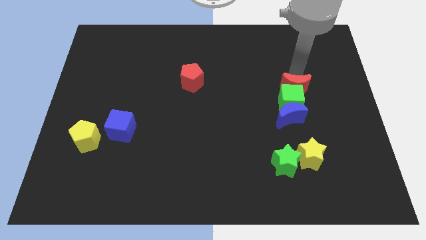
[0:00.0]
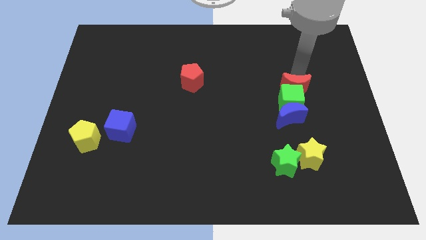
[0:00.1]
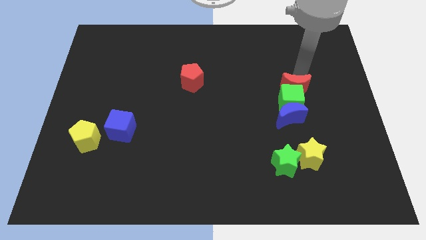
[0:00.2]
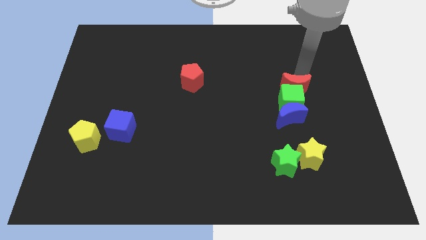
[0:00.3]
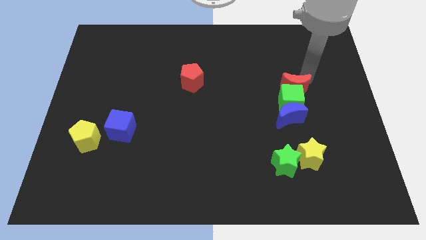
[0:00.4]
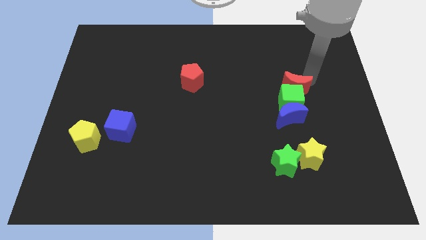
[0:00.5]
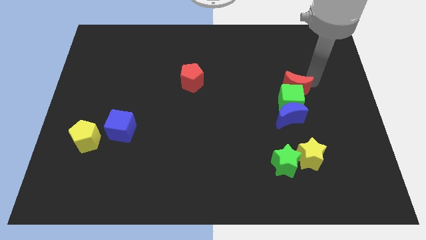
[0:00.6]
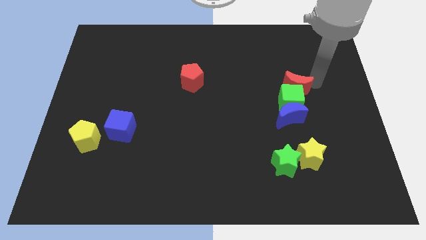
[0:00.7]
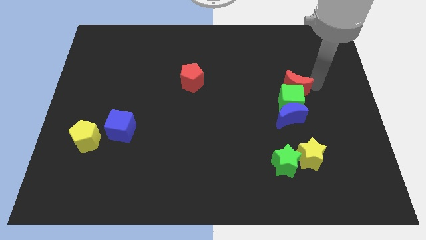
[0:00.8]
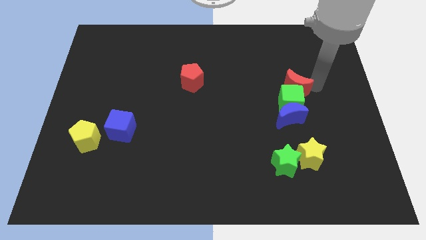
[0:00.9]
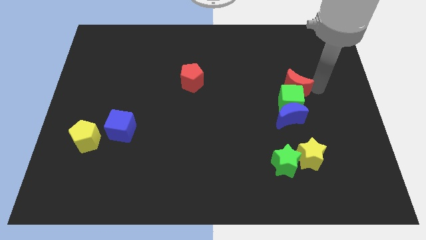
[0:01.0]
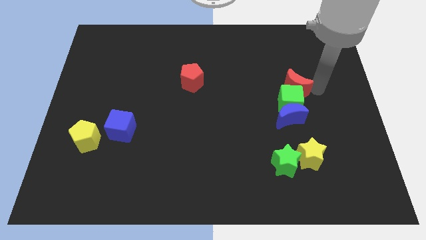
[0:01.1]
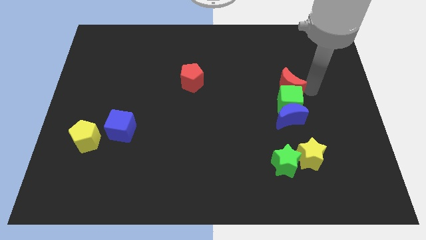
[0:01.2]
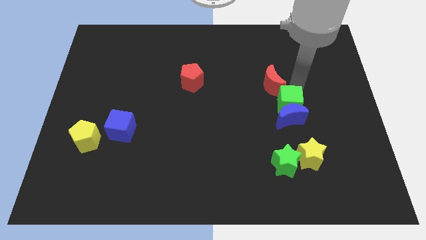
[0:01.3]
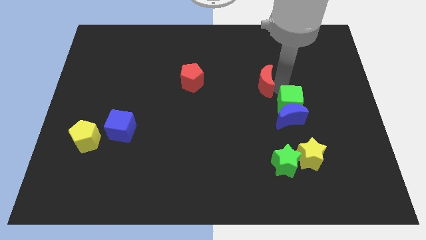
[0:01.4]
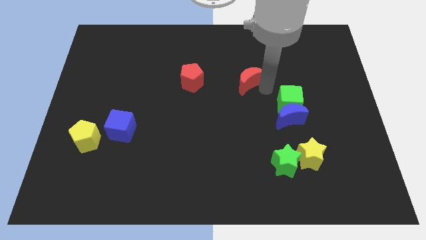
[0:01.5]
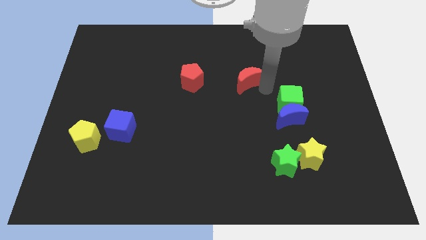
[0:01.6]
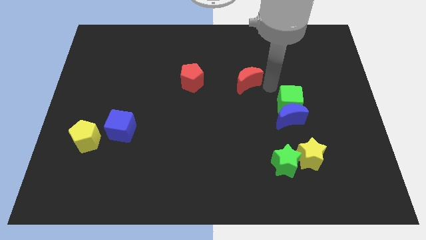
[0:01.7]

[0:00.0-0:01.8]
push the red moon to the right side of the red pentagon

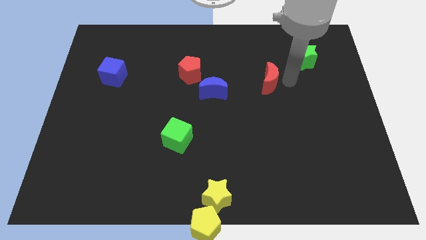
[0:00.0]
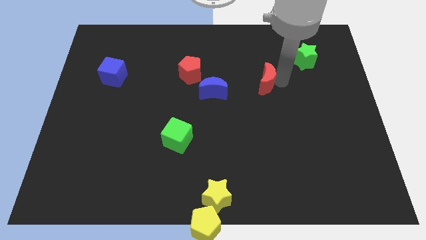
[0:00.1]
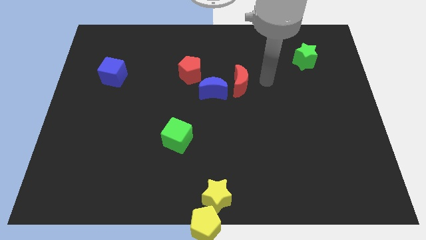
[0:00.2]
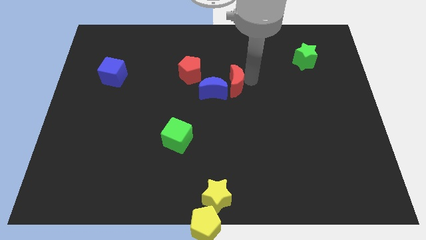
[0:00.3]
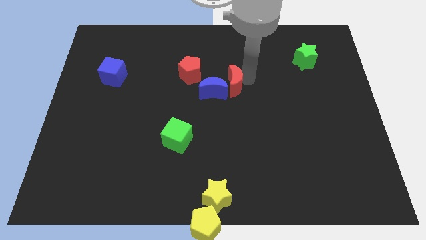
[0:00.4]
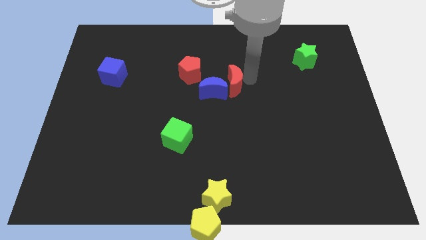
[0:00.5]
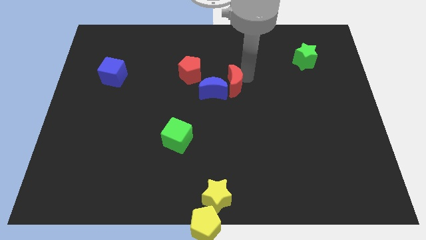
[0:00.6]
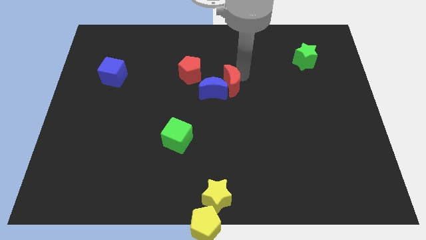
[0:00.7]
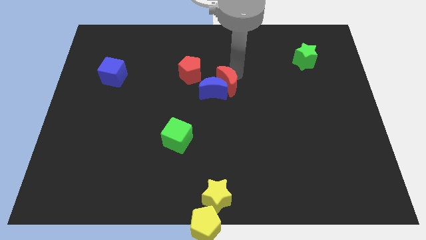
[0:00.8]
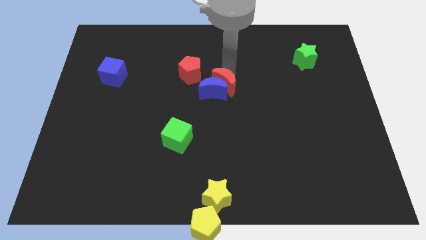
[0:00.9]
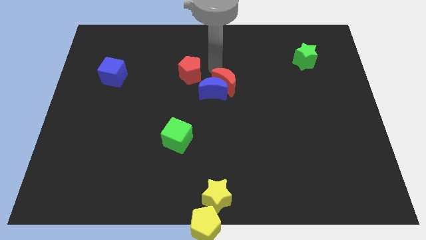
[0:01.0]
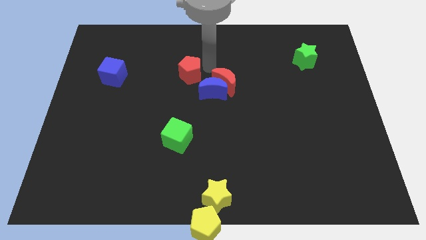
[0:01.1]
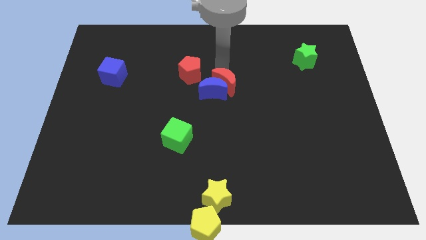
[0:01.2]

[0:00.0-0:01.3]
place red crescent into blue crescent

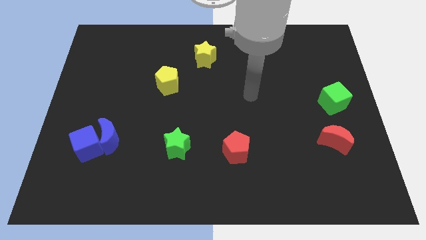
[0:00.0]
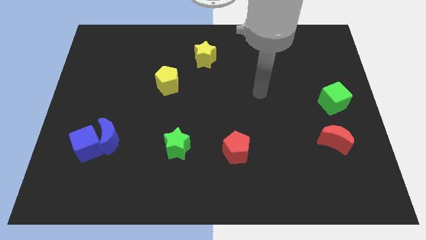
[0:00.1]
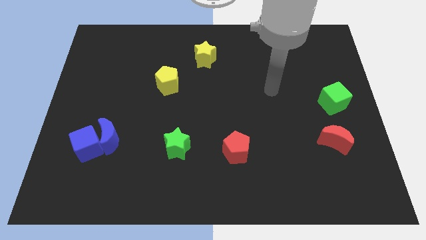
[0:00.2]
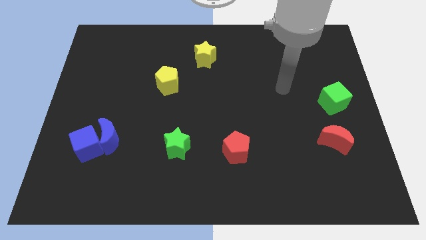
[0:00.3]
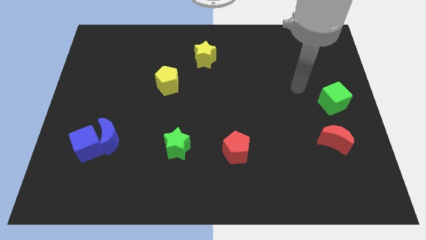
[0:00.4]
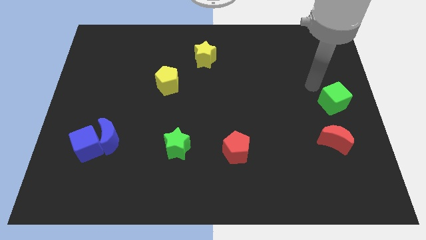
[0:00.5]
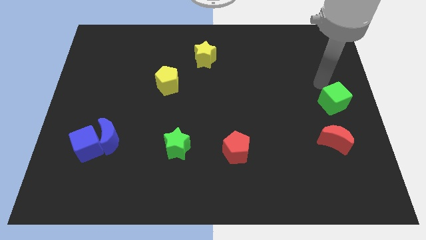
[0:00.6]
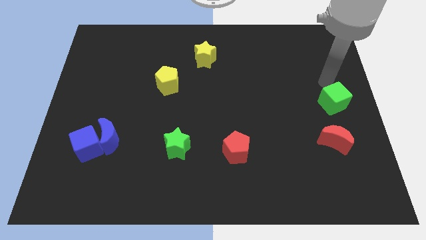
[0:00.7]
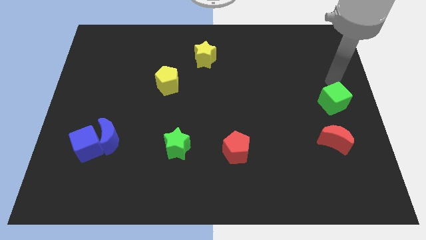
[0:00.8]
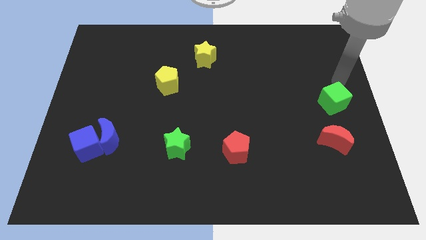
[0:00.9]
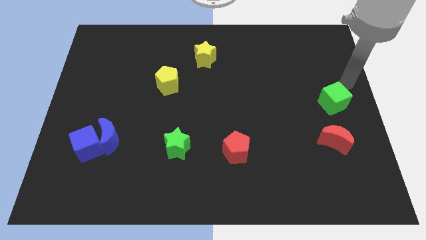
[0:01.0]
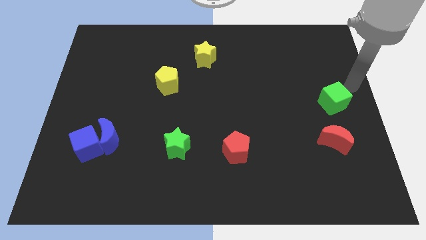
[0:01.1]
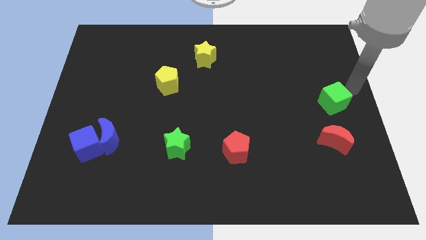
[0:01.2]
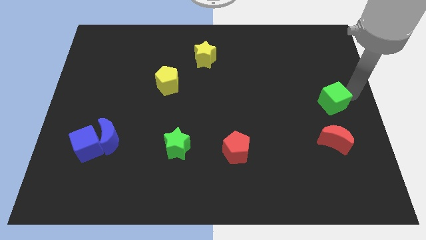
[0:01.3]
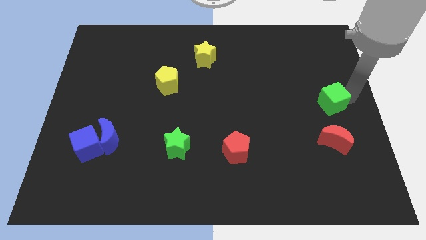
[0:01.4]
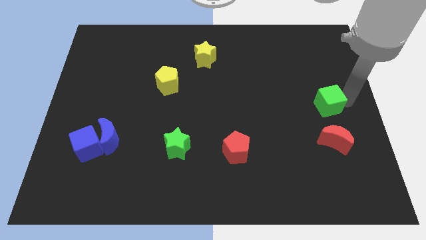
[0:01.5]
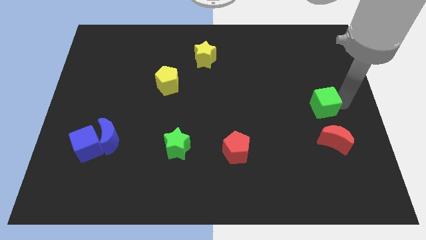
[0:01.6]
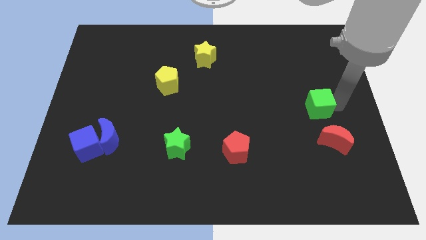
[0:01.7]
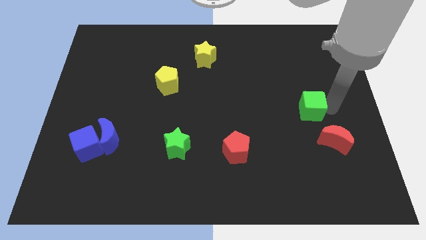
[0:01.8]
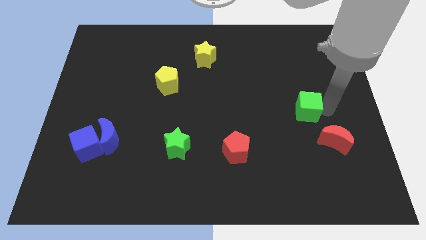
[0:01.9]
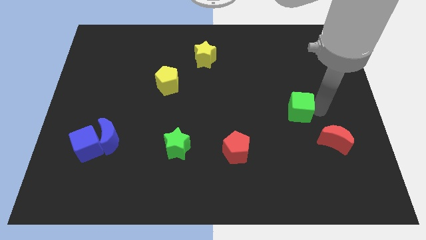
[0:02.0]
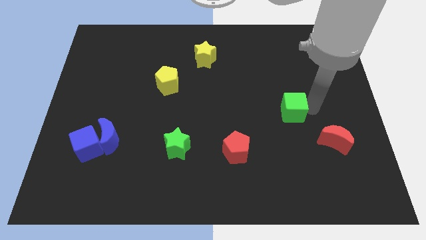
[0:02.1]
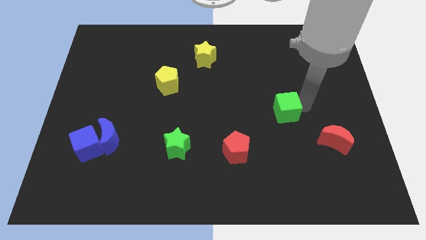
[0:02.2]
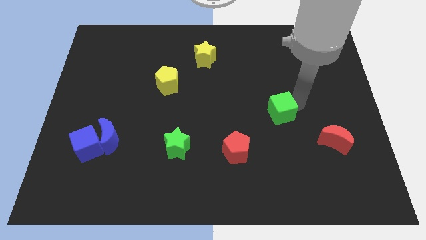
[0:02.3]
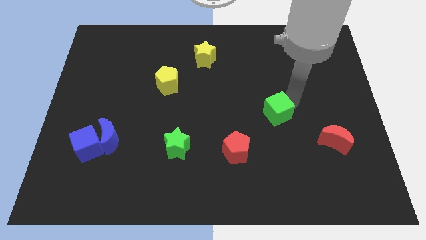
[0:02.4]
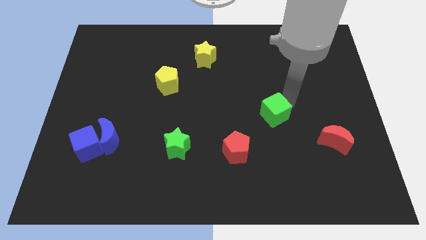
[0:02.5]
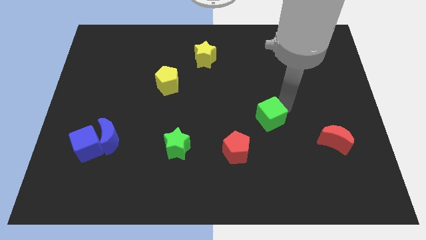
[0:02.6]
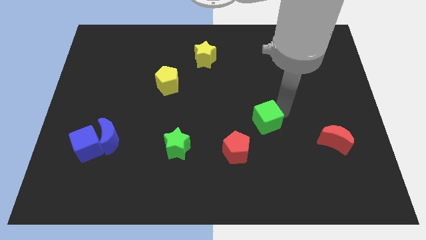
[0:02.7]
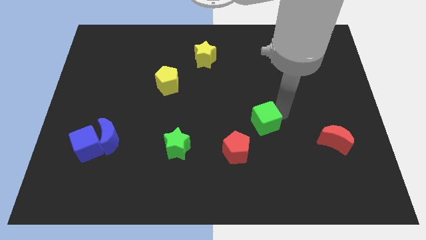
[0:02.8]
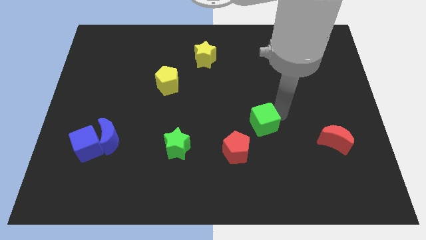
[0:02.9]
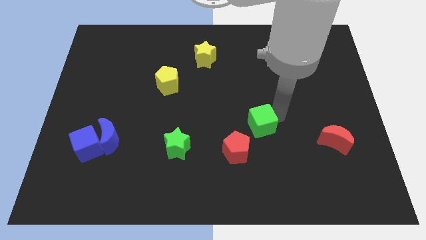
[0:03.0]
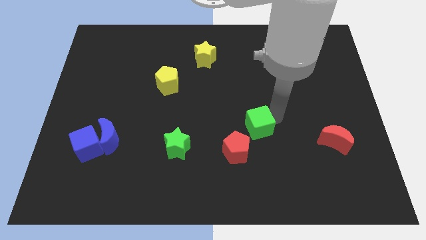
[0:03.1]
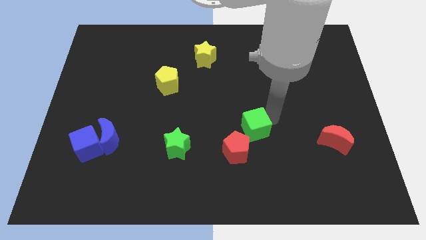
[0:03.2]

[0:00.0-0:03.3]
push the green cube to the top right side of the red pentagon

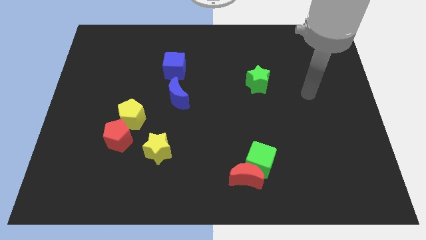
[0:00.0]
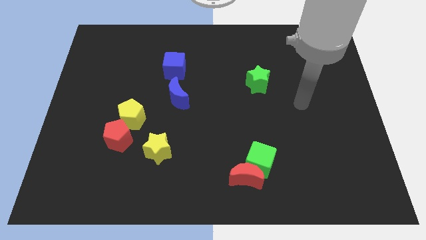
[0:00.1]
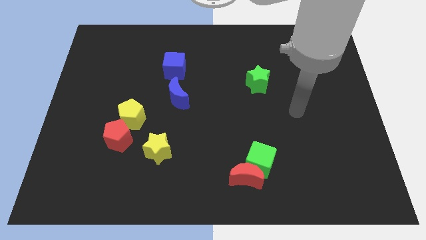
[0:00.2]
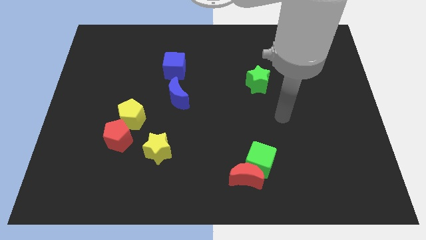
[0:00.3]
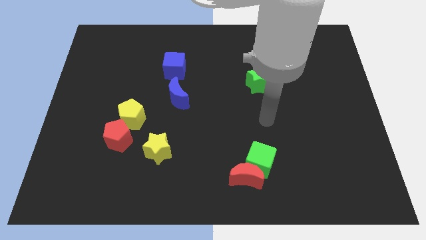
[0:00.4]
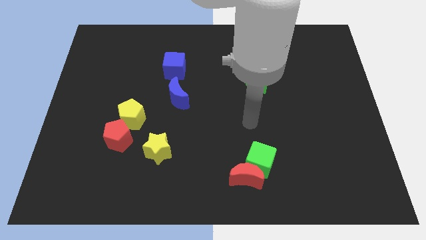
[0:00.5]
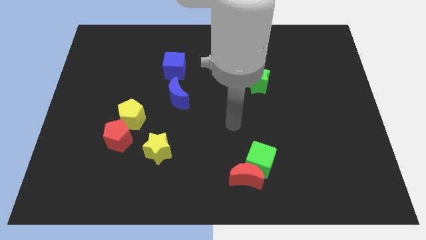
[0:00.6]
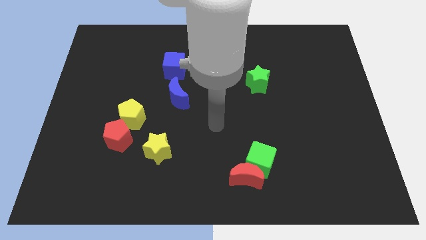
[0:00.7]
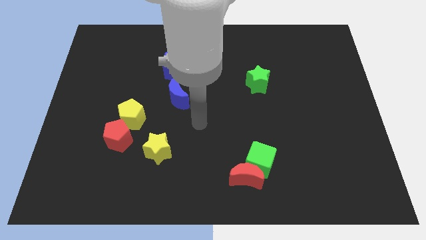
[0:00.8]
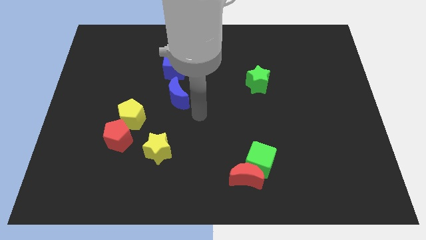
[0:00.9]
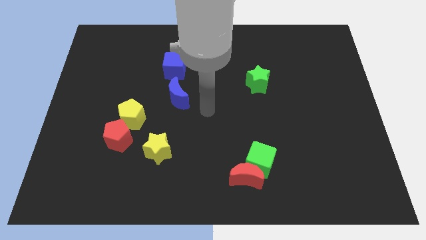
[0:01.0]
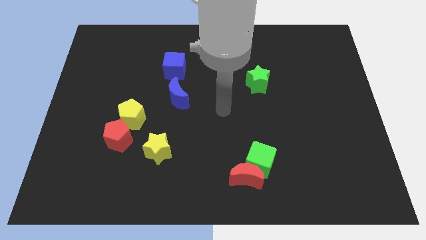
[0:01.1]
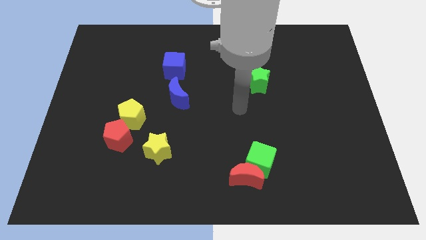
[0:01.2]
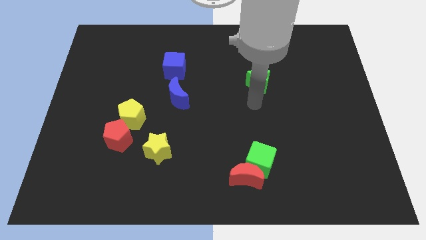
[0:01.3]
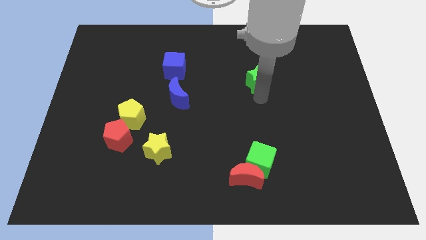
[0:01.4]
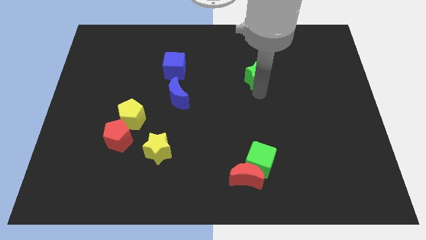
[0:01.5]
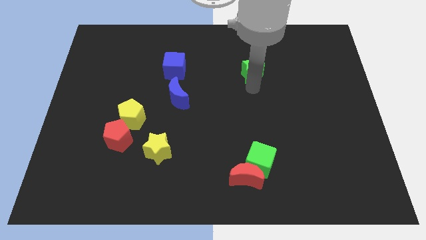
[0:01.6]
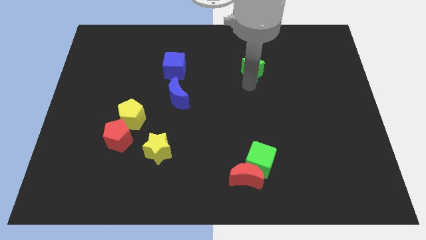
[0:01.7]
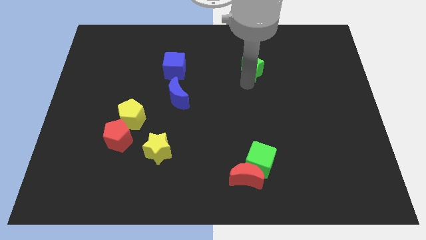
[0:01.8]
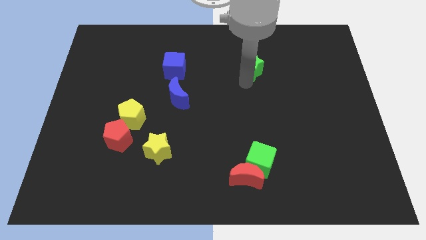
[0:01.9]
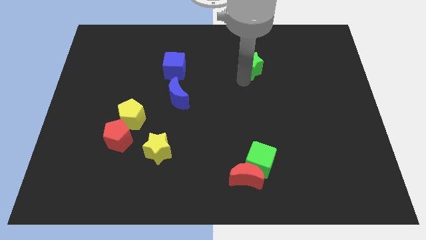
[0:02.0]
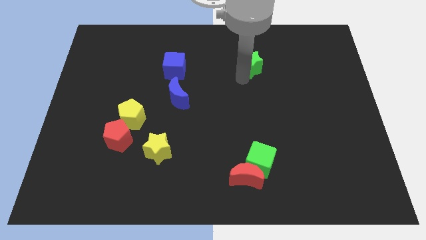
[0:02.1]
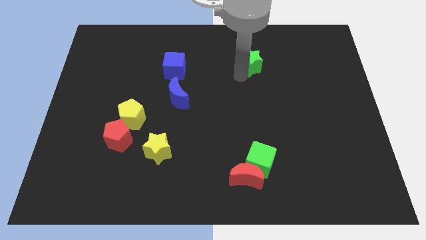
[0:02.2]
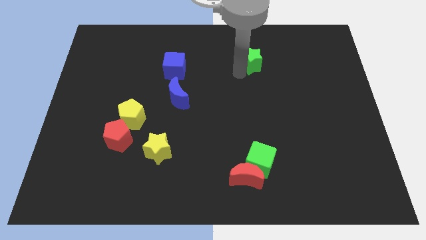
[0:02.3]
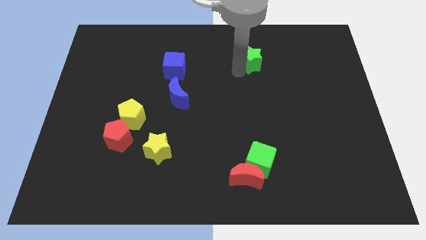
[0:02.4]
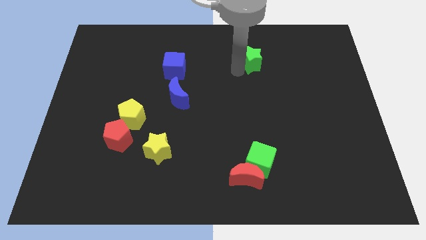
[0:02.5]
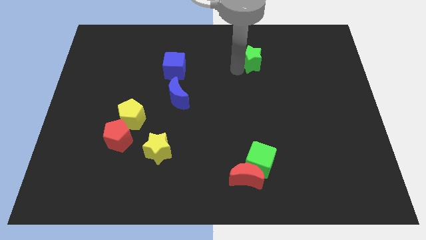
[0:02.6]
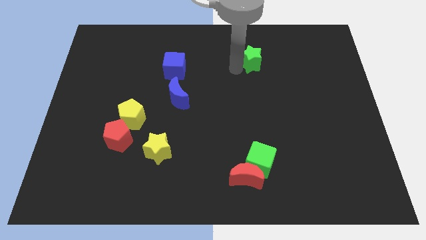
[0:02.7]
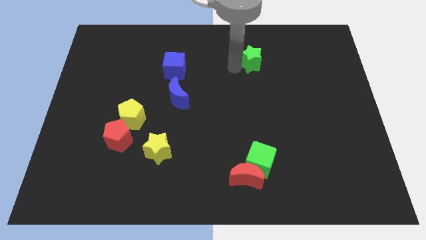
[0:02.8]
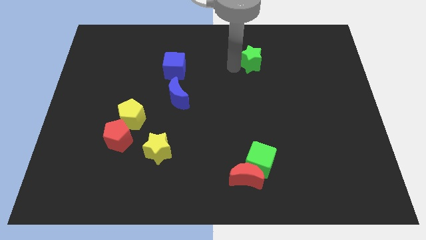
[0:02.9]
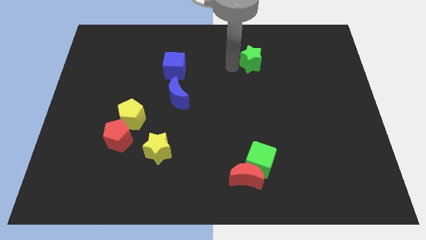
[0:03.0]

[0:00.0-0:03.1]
push the green star upward
